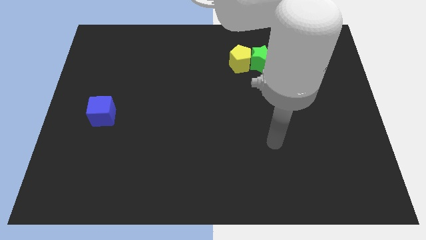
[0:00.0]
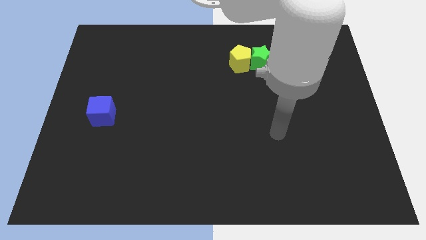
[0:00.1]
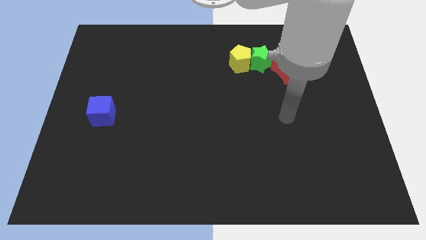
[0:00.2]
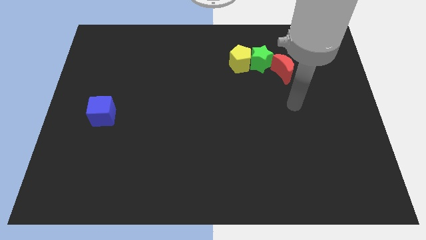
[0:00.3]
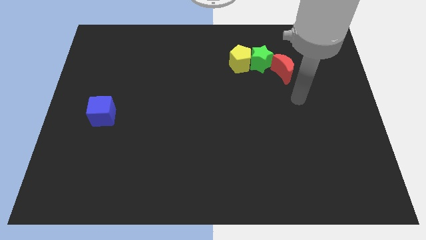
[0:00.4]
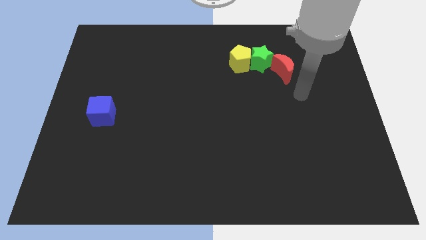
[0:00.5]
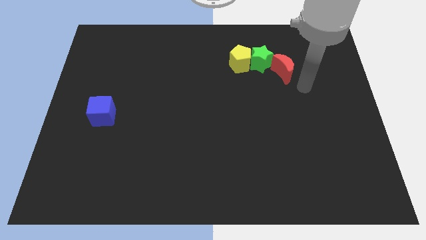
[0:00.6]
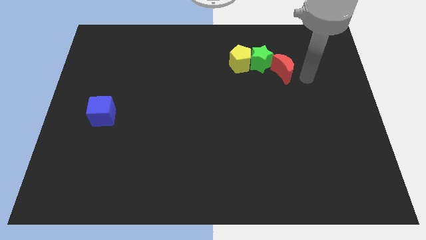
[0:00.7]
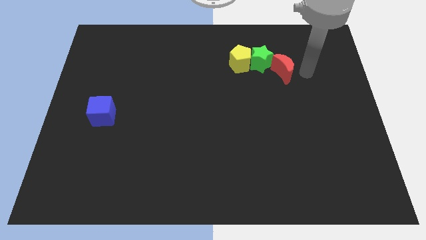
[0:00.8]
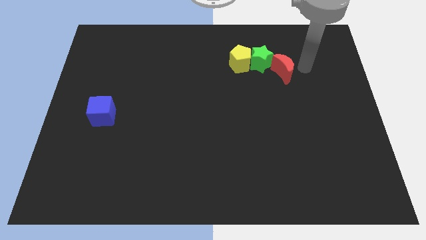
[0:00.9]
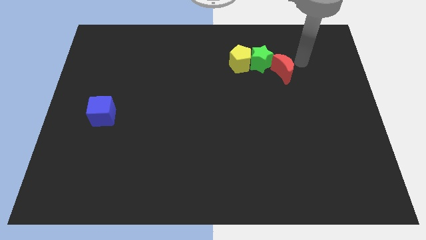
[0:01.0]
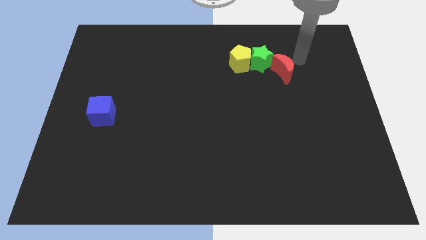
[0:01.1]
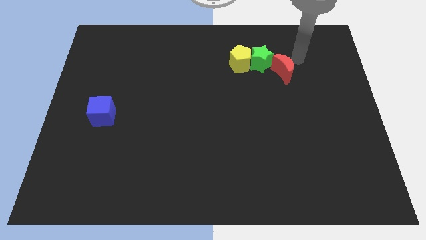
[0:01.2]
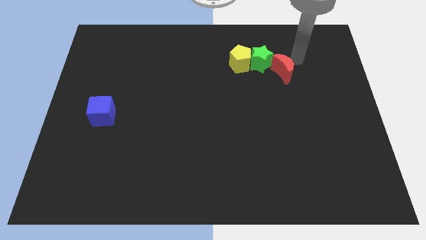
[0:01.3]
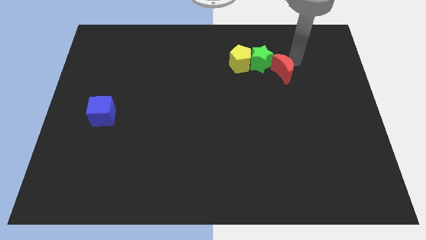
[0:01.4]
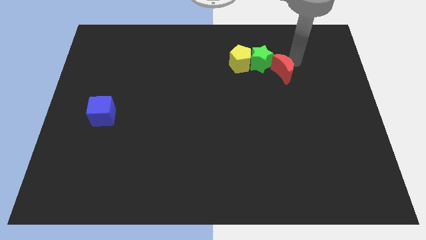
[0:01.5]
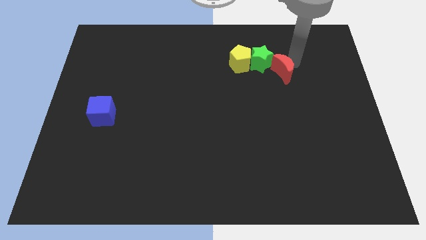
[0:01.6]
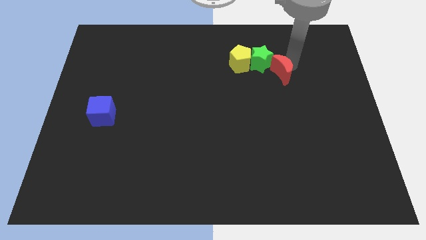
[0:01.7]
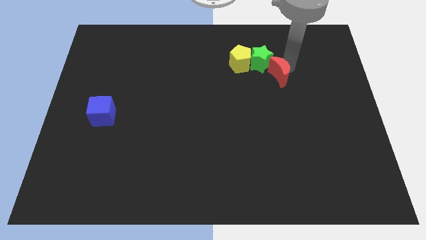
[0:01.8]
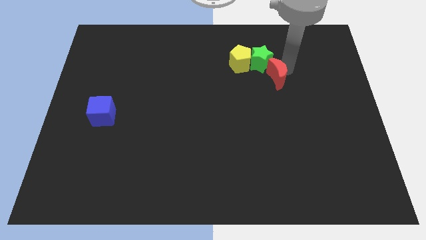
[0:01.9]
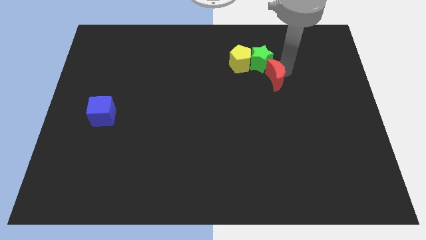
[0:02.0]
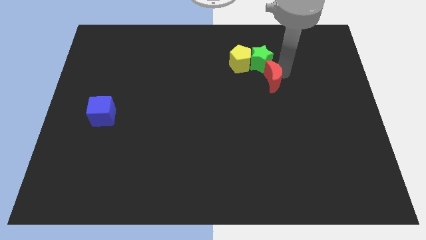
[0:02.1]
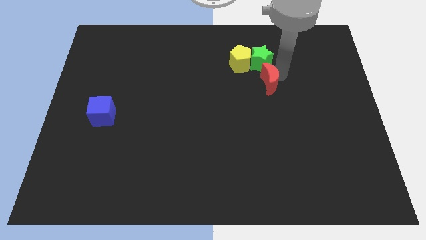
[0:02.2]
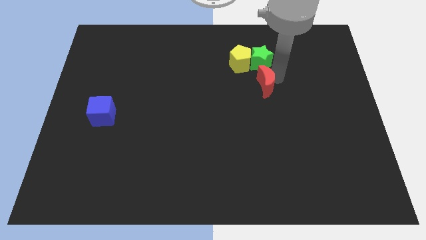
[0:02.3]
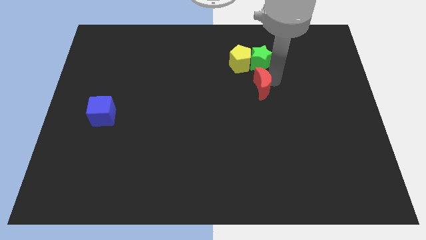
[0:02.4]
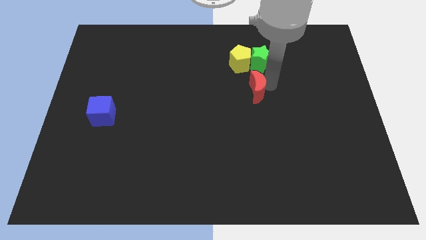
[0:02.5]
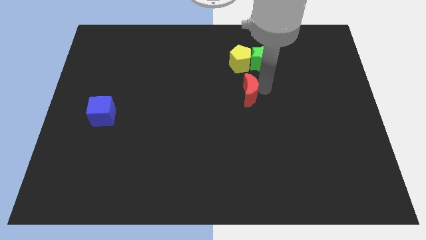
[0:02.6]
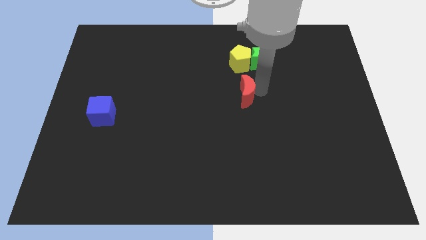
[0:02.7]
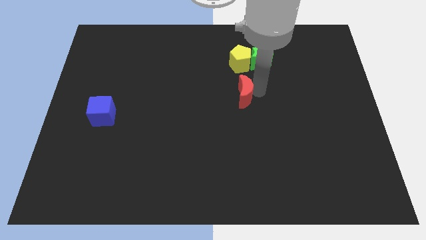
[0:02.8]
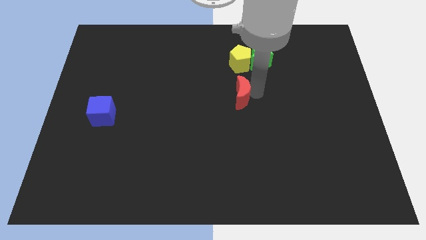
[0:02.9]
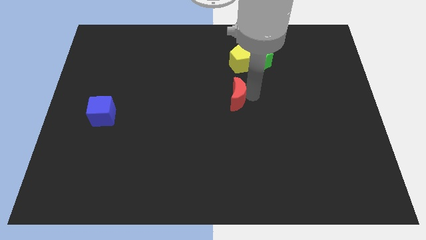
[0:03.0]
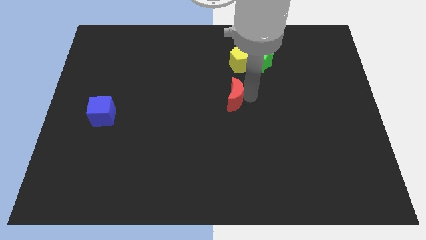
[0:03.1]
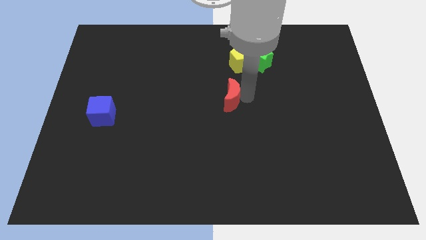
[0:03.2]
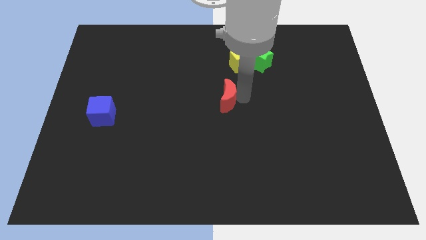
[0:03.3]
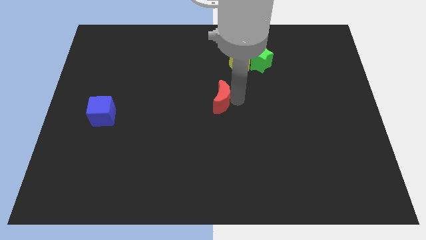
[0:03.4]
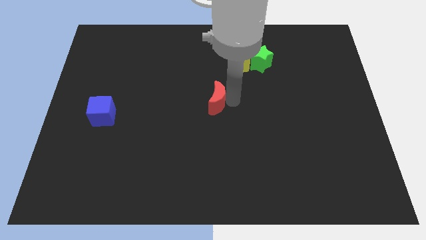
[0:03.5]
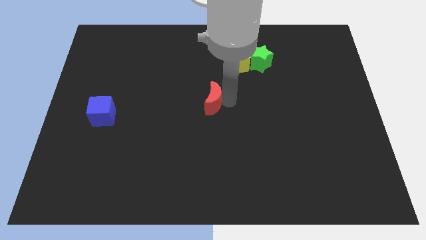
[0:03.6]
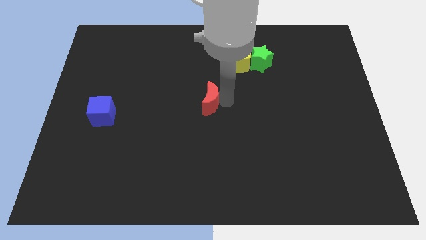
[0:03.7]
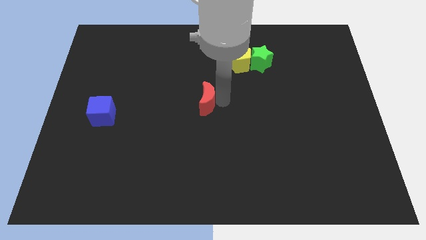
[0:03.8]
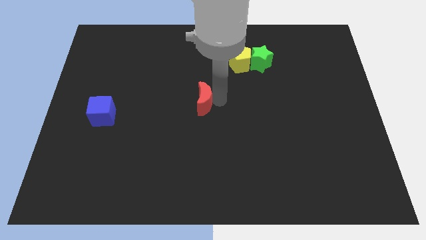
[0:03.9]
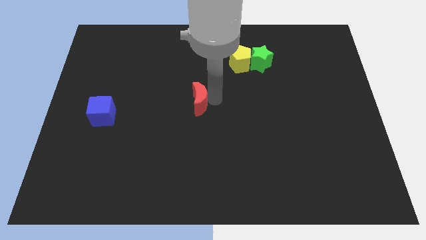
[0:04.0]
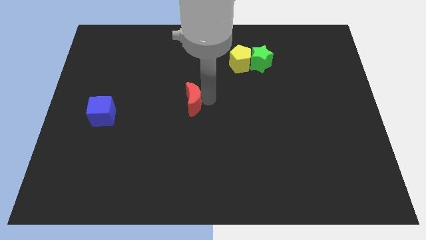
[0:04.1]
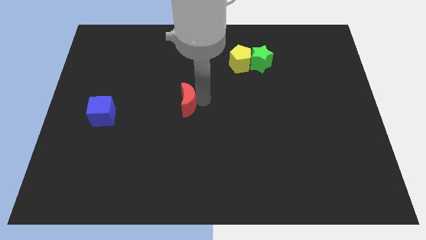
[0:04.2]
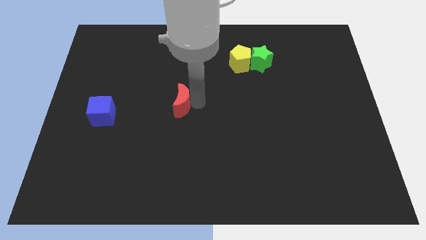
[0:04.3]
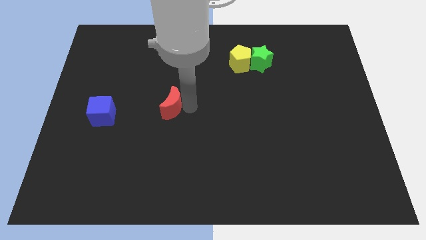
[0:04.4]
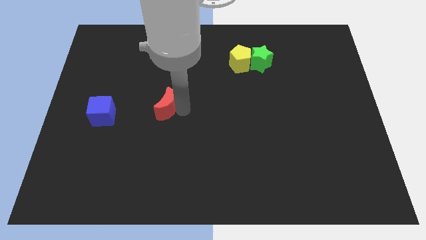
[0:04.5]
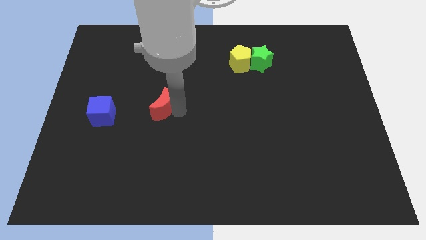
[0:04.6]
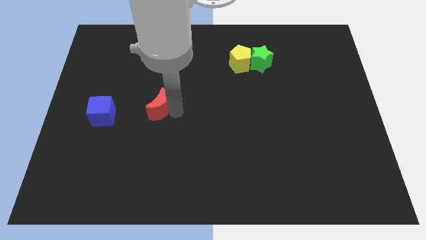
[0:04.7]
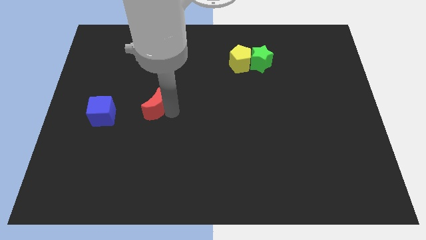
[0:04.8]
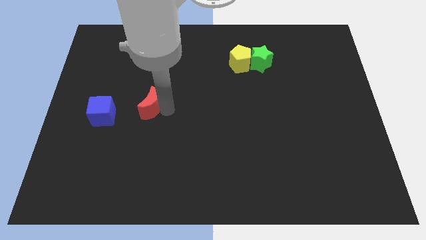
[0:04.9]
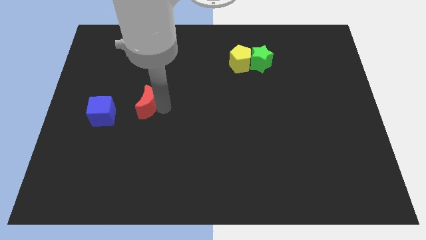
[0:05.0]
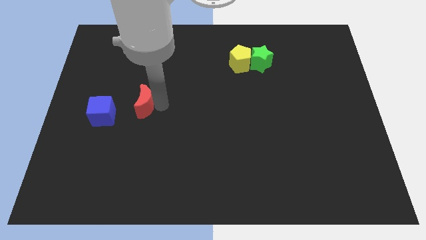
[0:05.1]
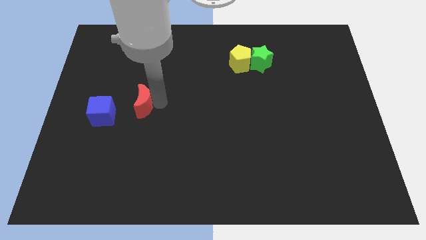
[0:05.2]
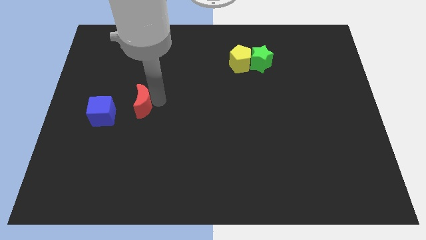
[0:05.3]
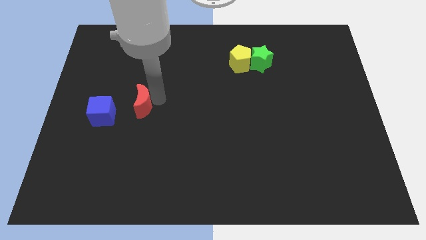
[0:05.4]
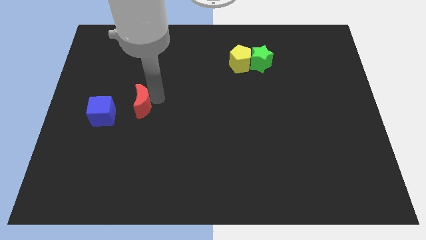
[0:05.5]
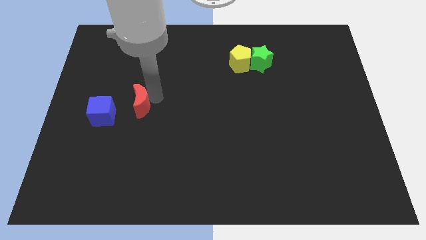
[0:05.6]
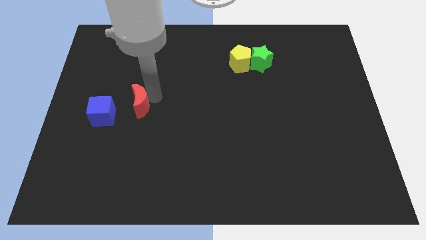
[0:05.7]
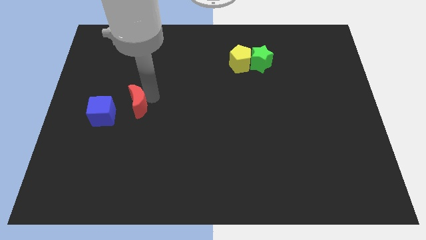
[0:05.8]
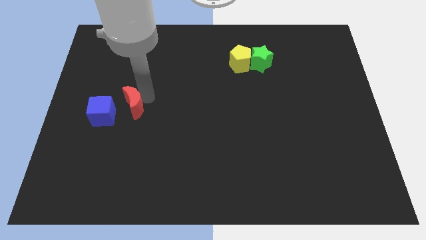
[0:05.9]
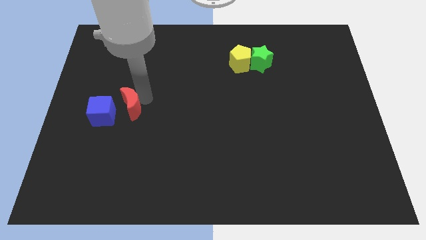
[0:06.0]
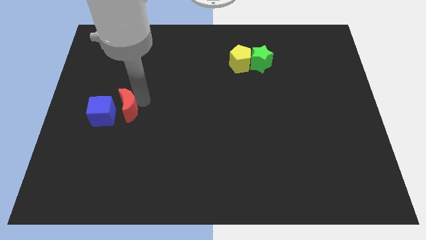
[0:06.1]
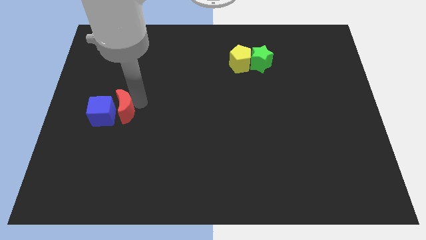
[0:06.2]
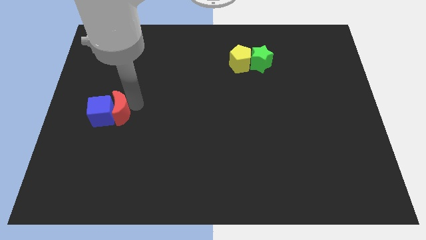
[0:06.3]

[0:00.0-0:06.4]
put the red moon towards the blue cube

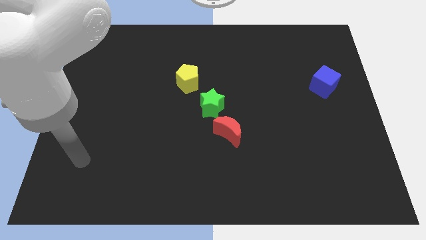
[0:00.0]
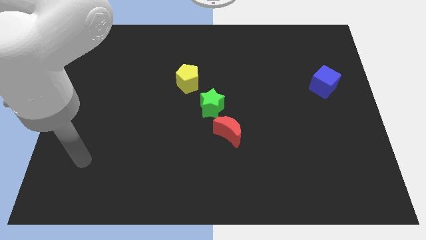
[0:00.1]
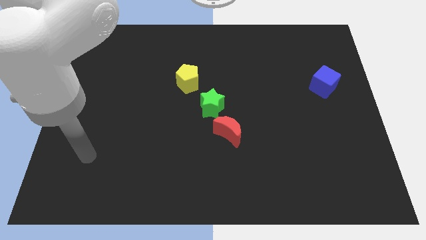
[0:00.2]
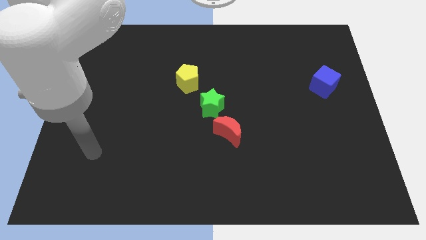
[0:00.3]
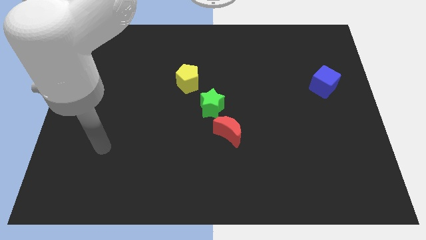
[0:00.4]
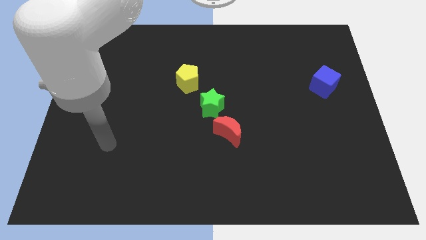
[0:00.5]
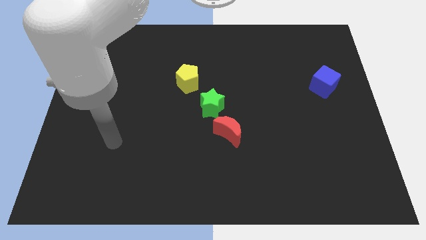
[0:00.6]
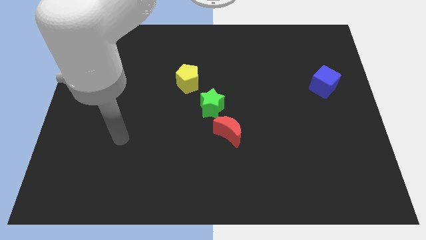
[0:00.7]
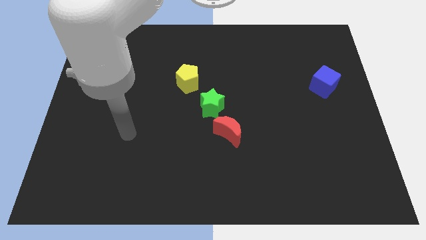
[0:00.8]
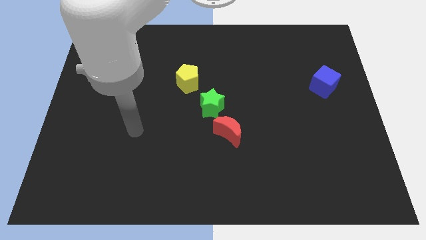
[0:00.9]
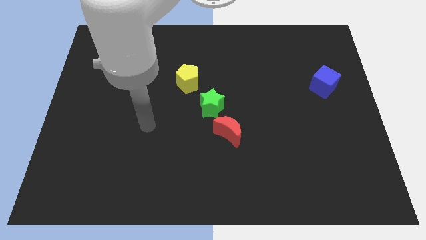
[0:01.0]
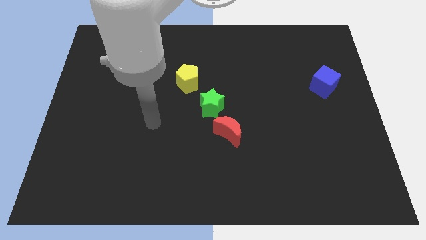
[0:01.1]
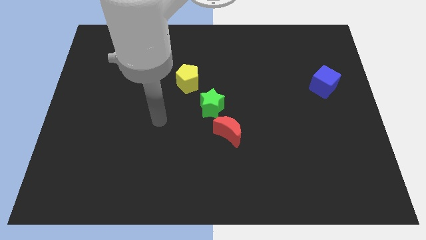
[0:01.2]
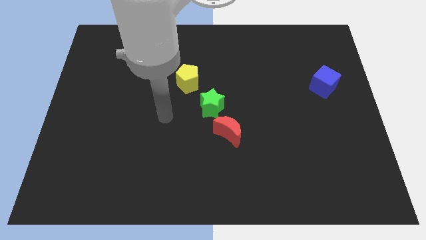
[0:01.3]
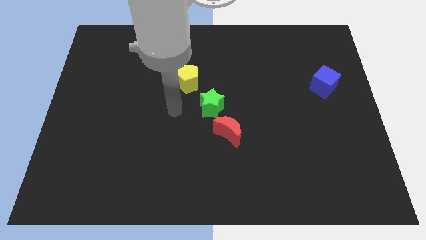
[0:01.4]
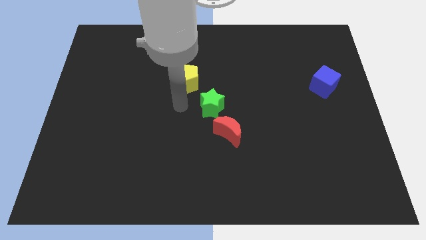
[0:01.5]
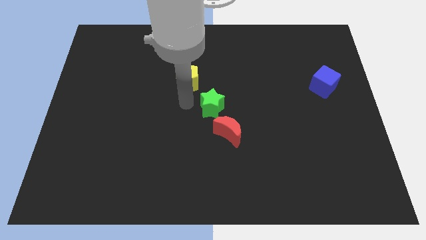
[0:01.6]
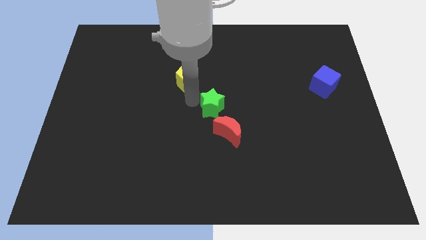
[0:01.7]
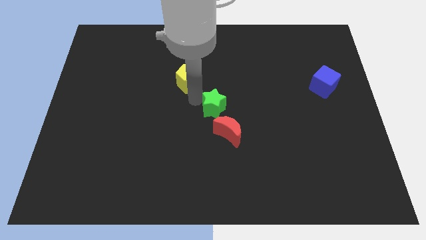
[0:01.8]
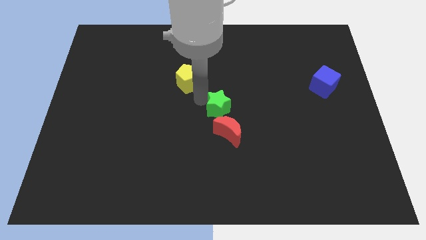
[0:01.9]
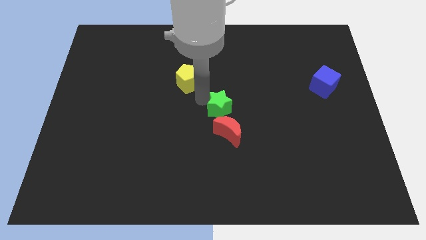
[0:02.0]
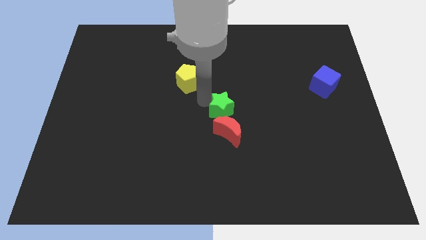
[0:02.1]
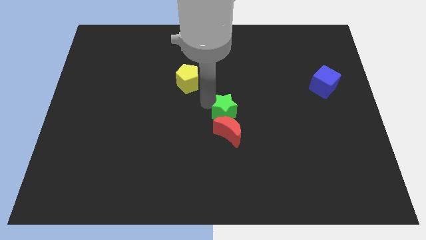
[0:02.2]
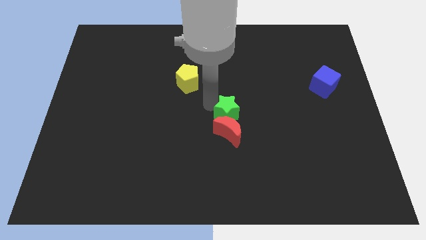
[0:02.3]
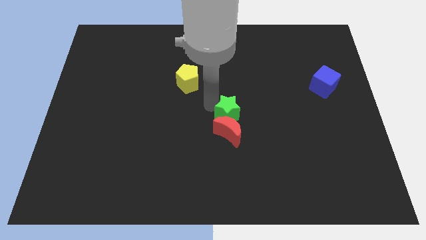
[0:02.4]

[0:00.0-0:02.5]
push the star close to the red moon
